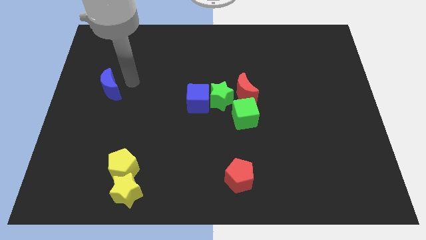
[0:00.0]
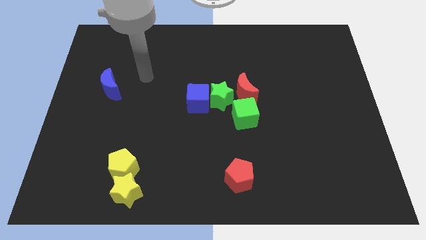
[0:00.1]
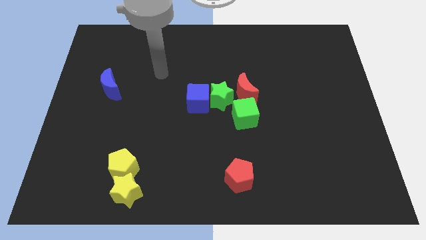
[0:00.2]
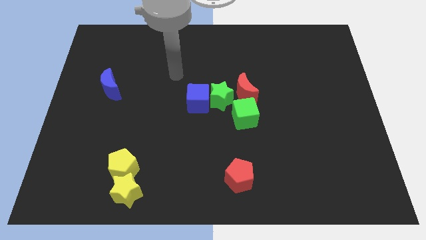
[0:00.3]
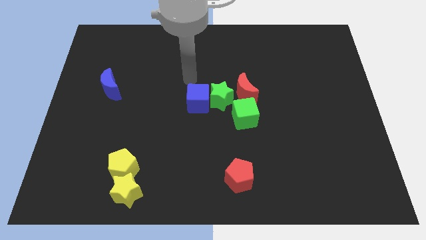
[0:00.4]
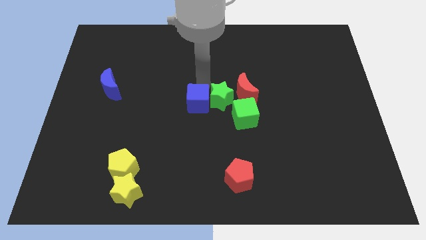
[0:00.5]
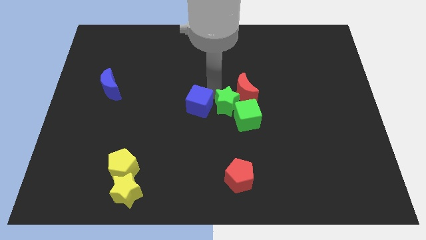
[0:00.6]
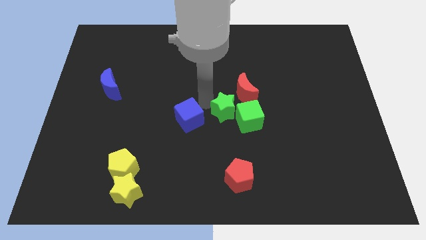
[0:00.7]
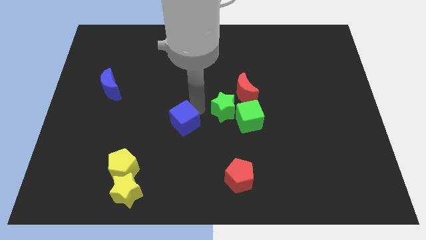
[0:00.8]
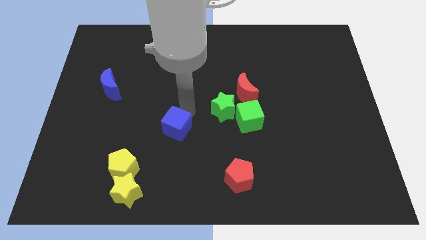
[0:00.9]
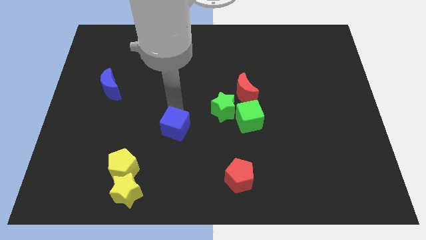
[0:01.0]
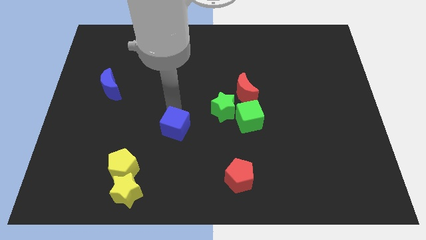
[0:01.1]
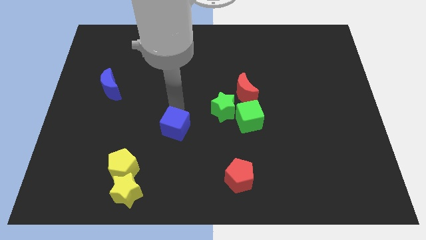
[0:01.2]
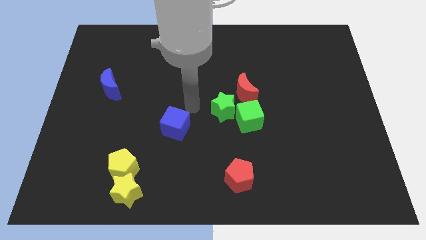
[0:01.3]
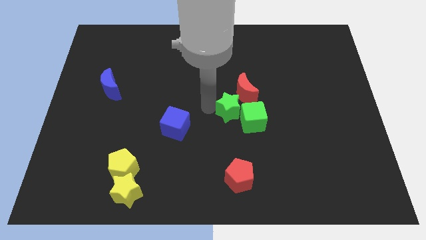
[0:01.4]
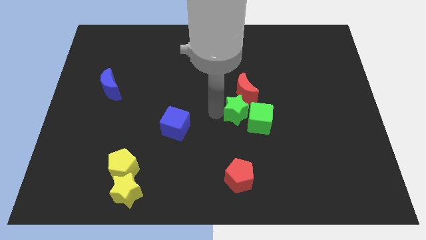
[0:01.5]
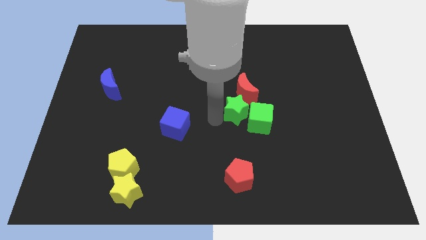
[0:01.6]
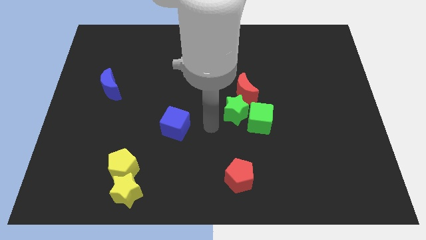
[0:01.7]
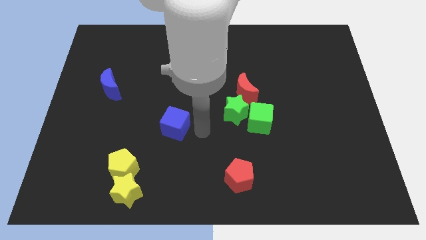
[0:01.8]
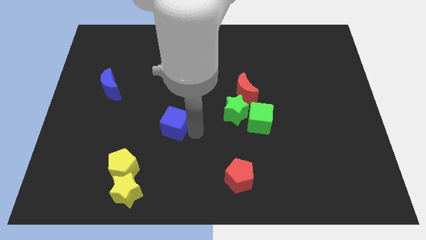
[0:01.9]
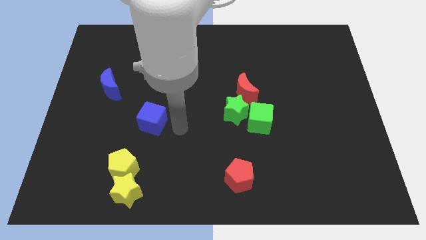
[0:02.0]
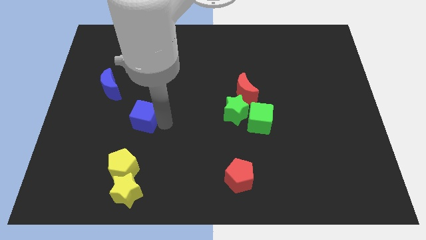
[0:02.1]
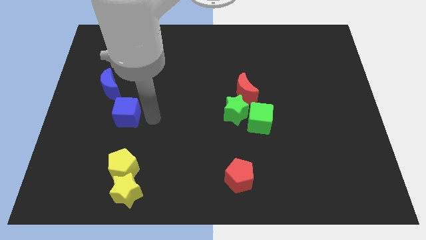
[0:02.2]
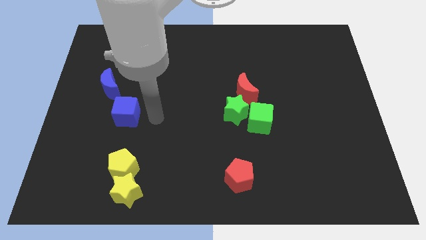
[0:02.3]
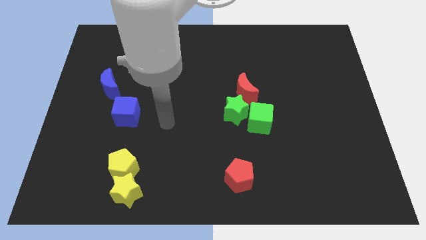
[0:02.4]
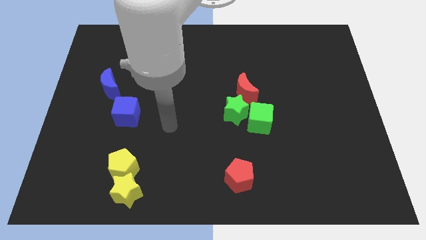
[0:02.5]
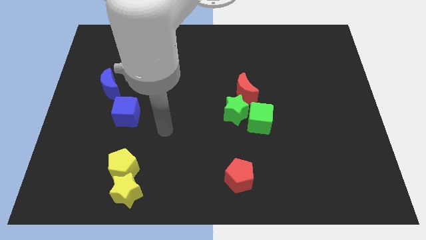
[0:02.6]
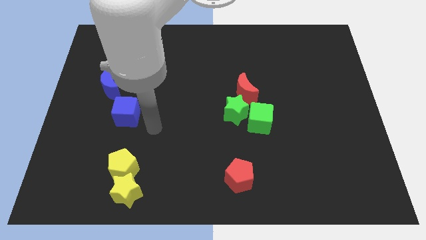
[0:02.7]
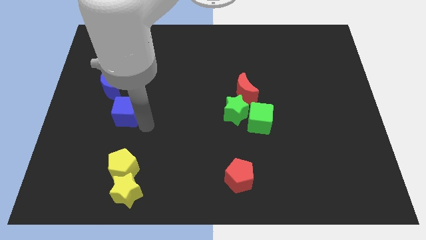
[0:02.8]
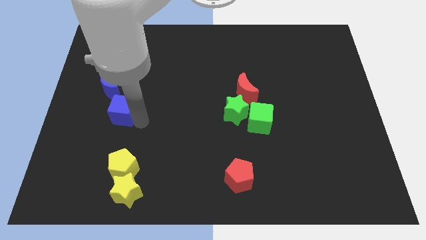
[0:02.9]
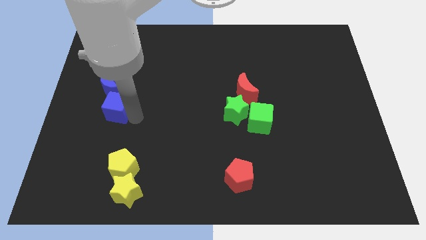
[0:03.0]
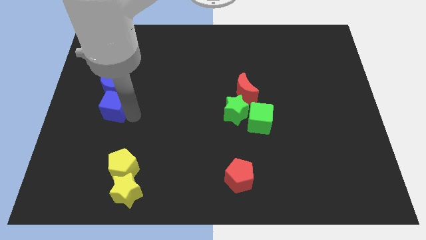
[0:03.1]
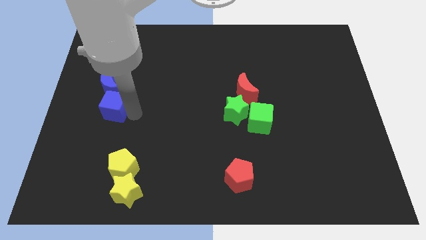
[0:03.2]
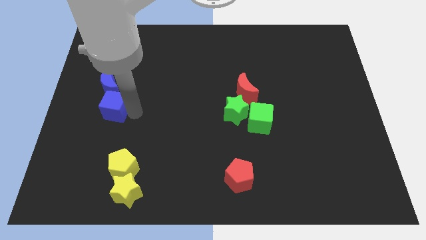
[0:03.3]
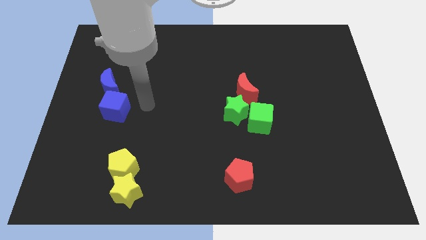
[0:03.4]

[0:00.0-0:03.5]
push the blue cube towards blue moon

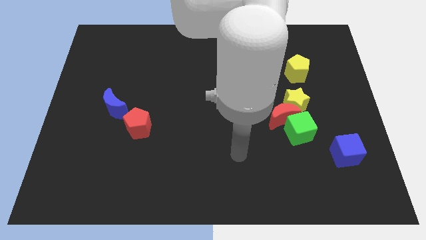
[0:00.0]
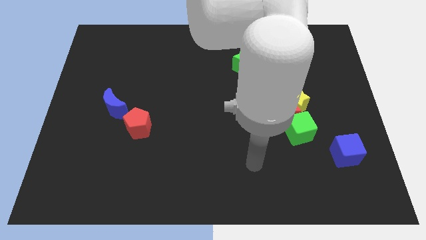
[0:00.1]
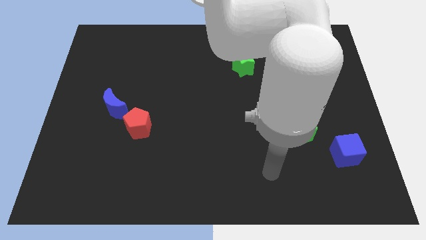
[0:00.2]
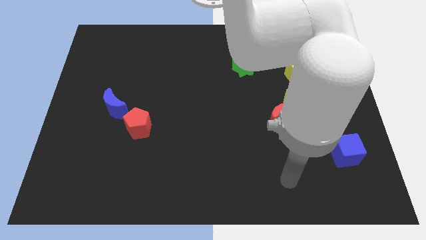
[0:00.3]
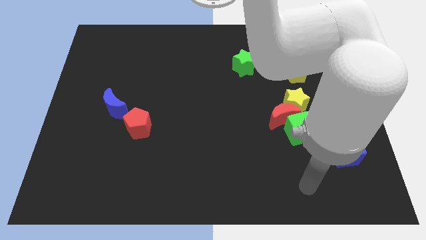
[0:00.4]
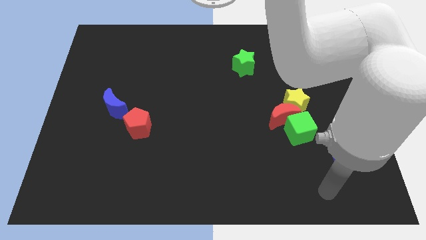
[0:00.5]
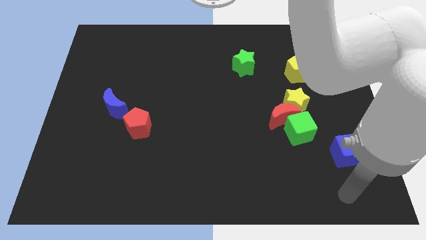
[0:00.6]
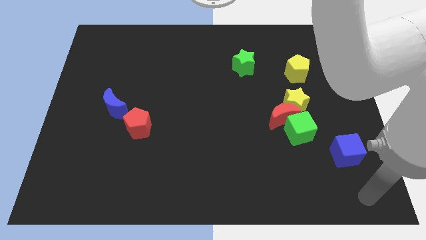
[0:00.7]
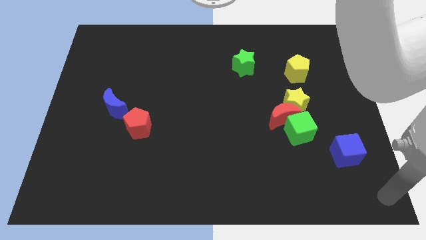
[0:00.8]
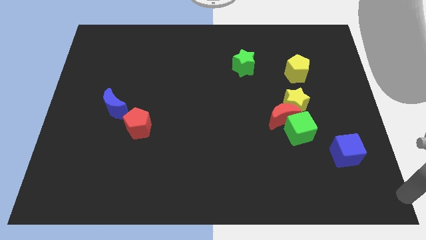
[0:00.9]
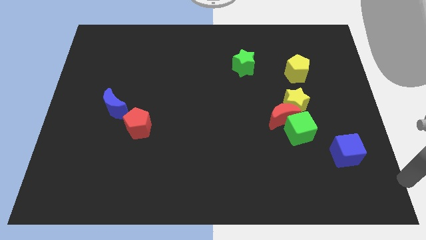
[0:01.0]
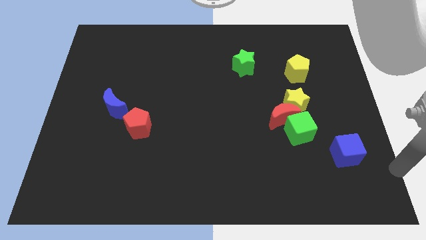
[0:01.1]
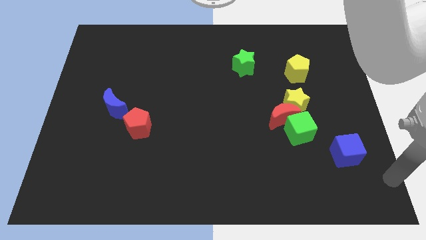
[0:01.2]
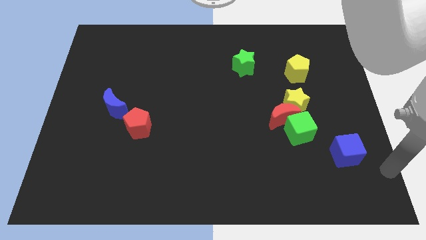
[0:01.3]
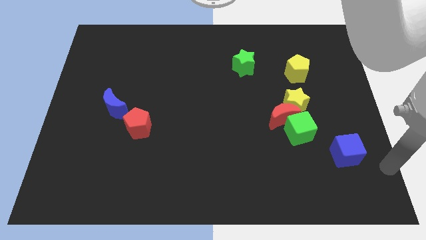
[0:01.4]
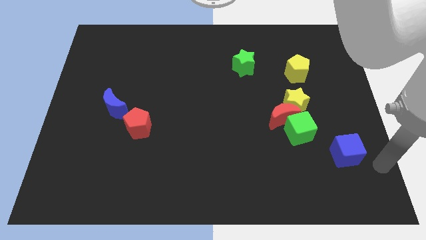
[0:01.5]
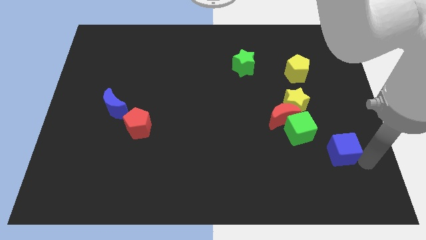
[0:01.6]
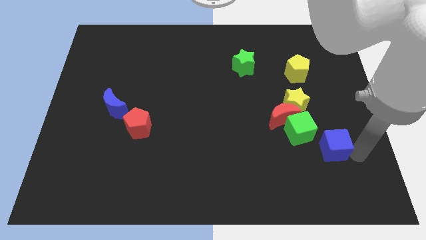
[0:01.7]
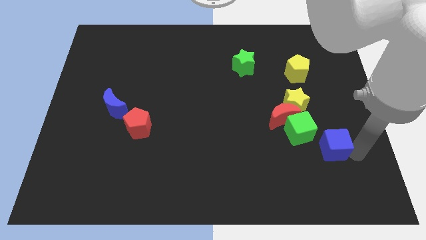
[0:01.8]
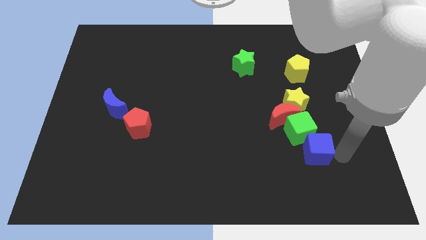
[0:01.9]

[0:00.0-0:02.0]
place the blue cube below the green cube

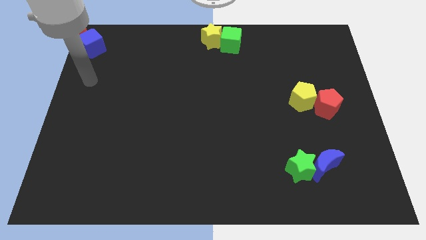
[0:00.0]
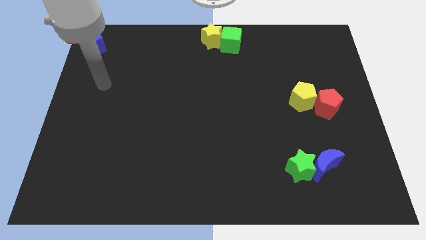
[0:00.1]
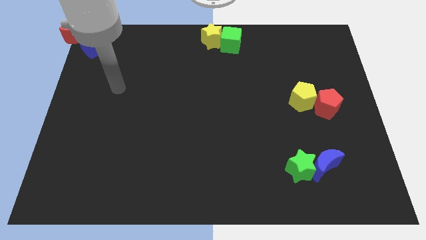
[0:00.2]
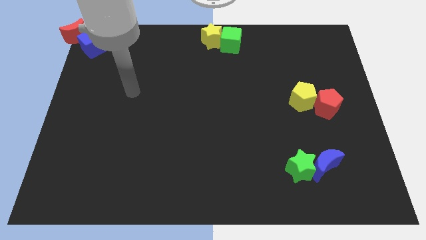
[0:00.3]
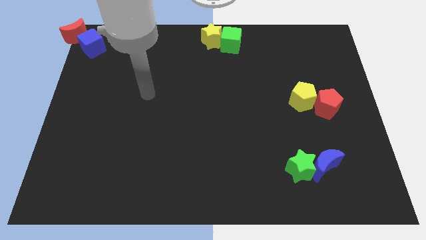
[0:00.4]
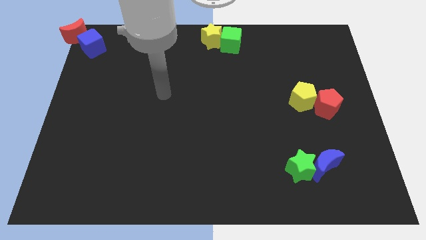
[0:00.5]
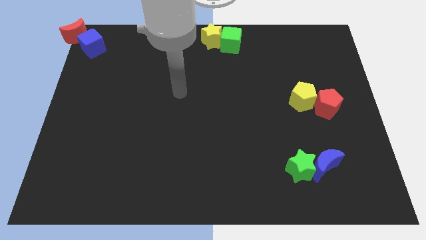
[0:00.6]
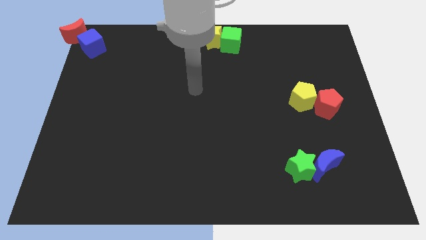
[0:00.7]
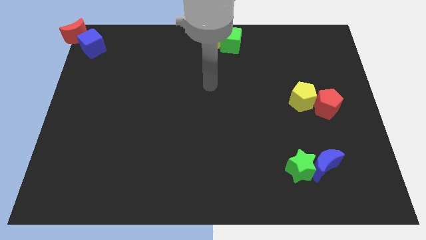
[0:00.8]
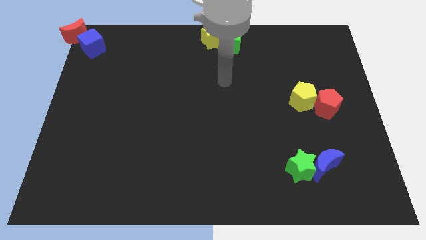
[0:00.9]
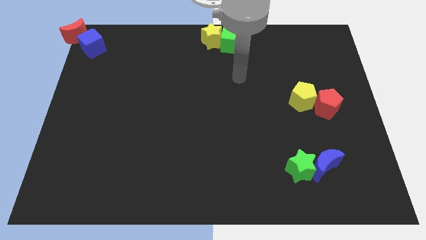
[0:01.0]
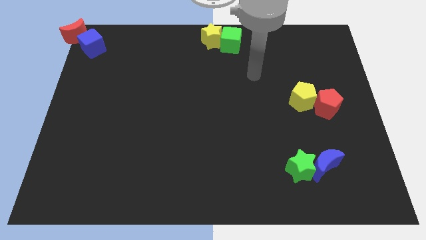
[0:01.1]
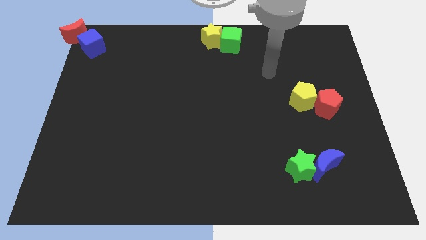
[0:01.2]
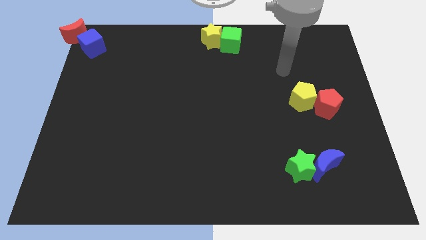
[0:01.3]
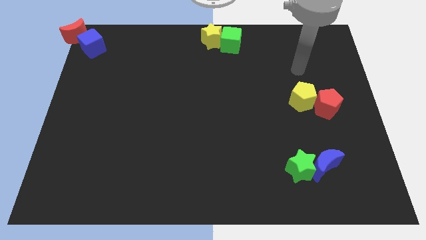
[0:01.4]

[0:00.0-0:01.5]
move your arm above the yellow pentagon

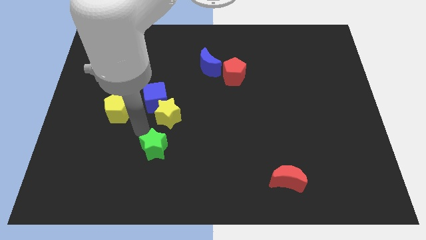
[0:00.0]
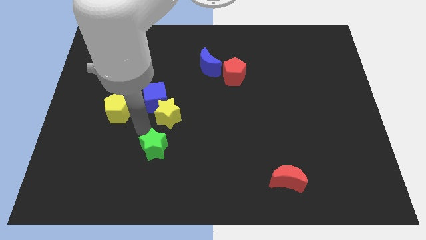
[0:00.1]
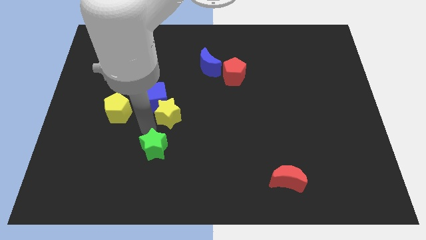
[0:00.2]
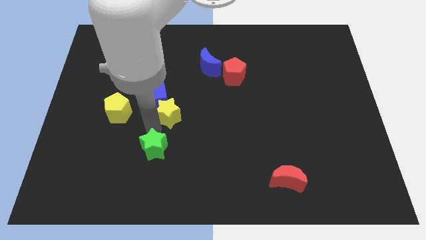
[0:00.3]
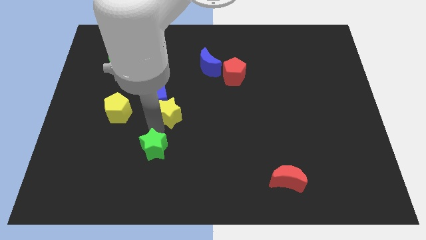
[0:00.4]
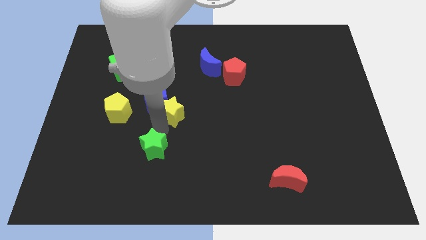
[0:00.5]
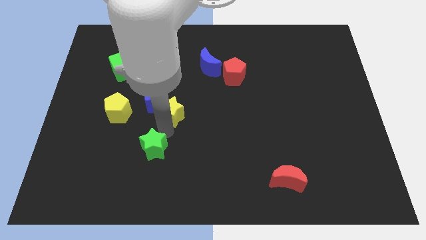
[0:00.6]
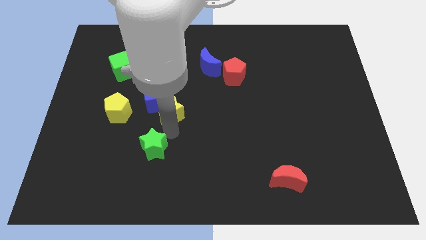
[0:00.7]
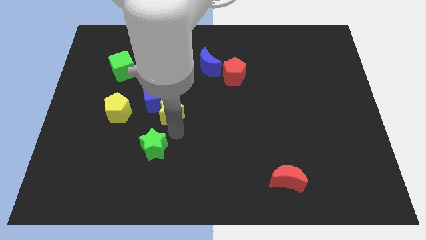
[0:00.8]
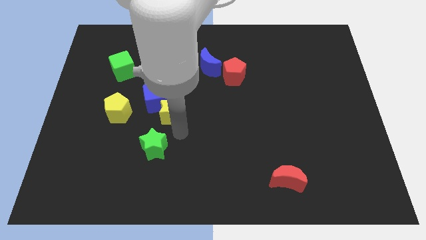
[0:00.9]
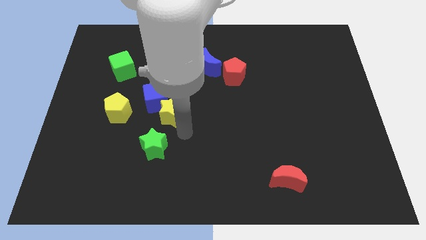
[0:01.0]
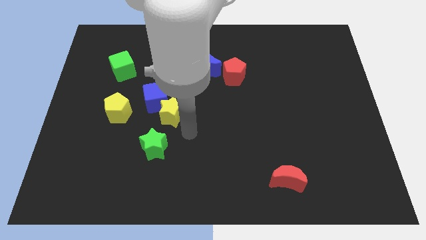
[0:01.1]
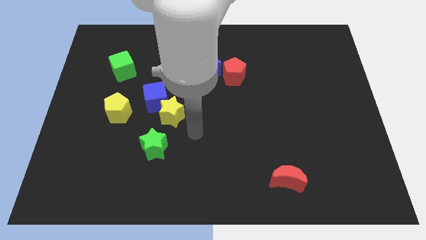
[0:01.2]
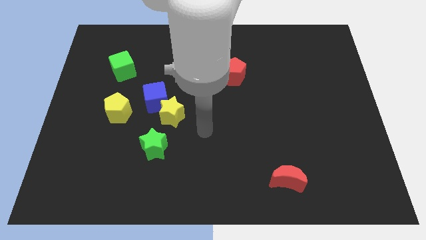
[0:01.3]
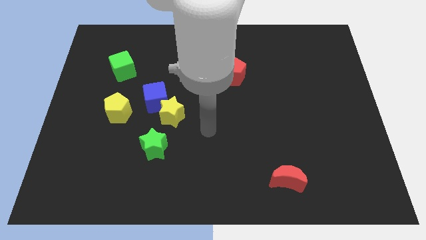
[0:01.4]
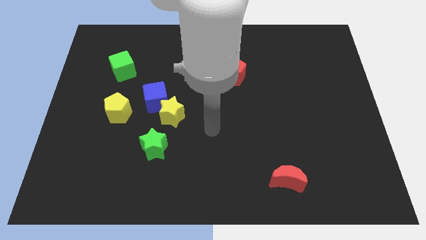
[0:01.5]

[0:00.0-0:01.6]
touch the yellow star

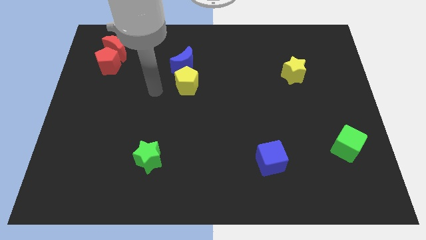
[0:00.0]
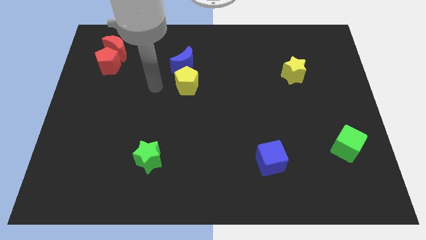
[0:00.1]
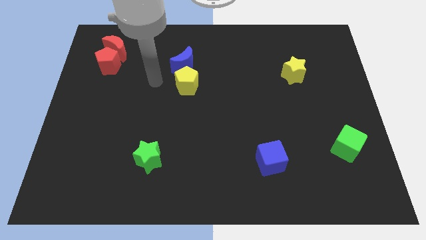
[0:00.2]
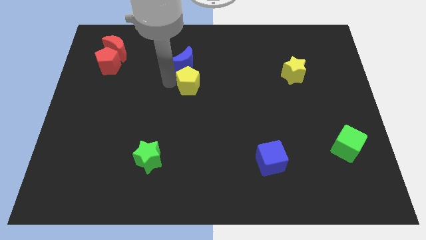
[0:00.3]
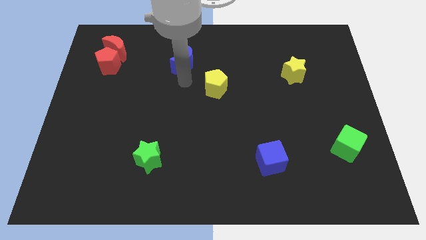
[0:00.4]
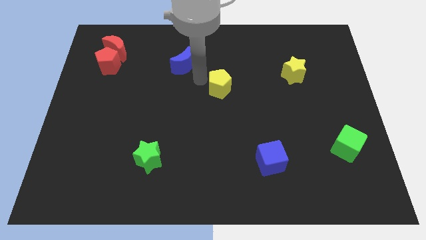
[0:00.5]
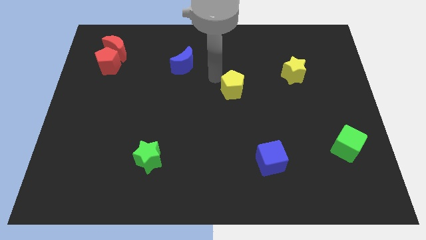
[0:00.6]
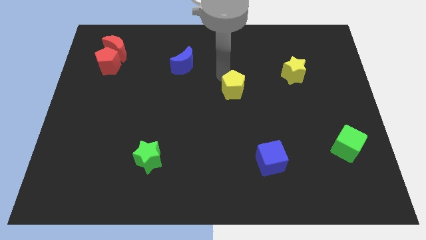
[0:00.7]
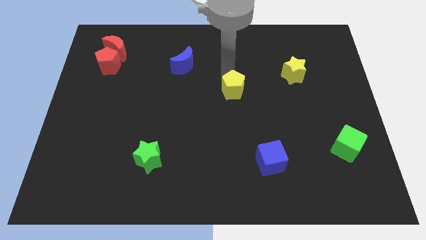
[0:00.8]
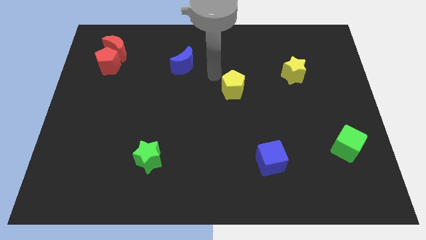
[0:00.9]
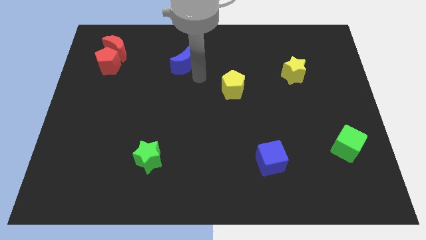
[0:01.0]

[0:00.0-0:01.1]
place the yellow pentagon at the center of the board
